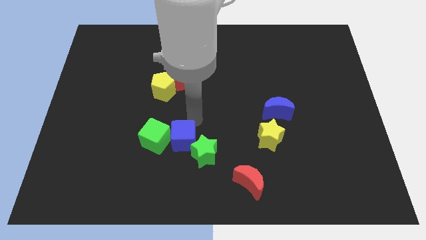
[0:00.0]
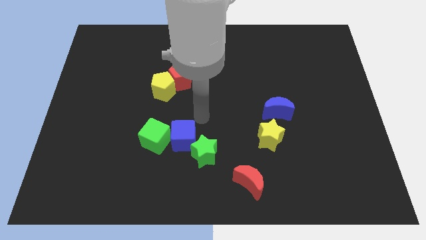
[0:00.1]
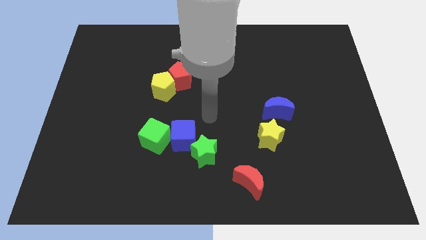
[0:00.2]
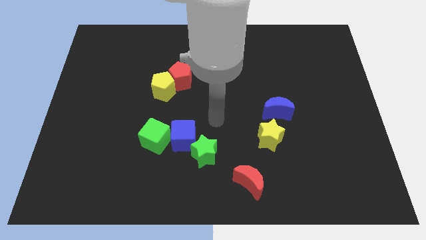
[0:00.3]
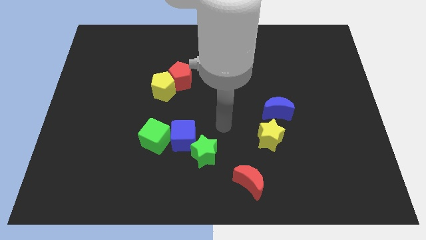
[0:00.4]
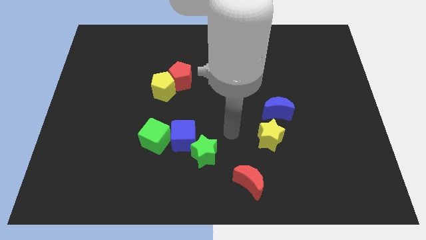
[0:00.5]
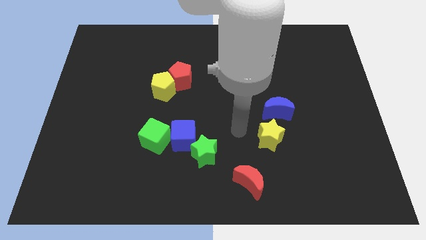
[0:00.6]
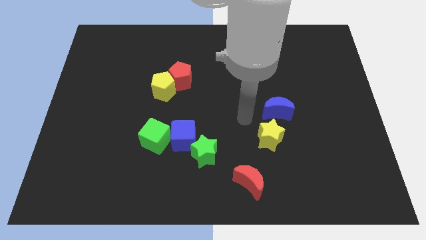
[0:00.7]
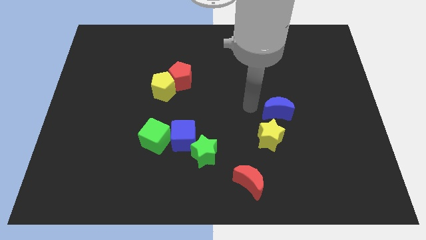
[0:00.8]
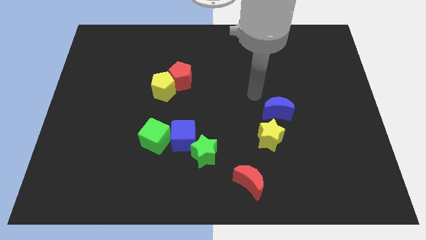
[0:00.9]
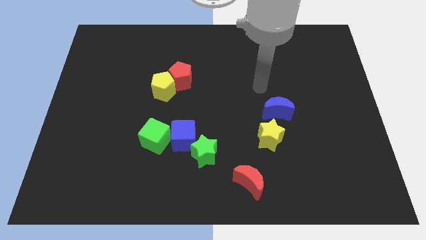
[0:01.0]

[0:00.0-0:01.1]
move your arm towards center of the board

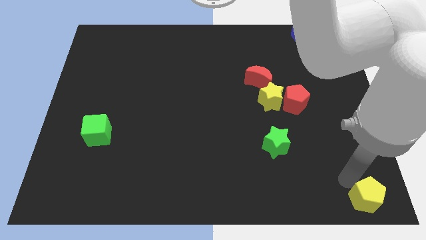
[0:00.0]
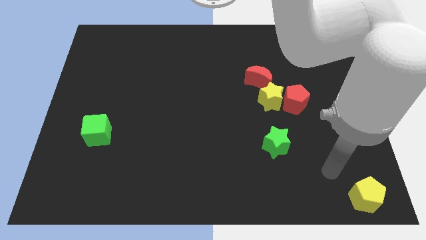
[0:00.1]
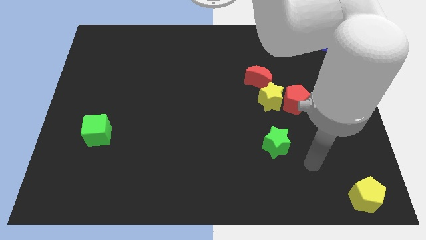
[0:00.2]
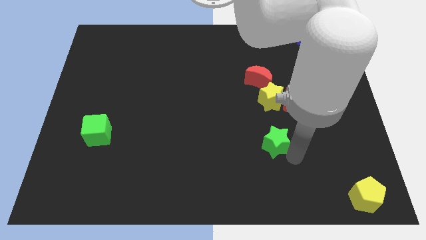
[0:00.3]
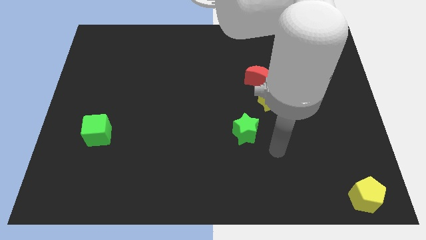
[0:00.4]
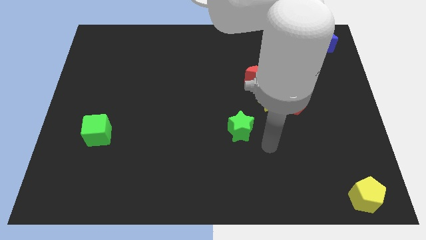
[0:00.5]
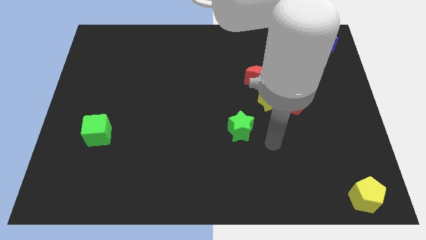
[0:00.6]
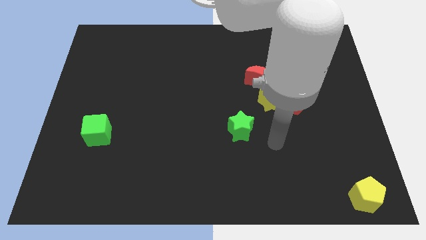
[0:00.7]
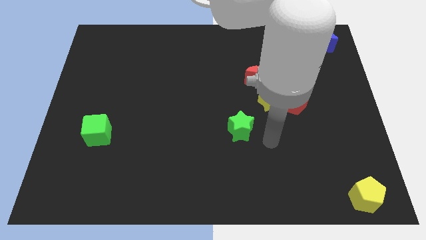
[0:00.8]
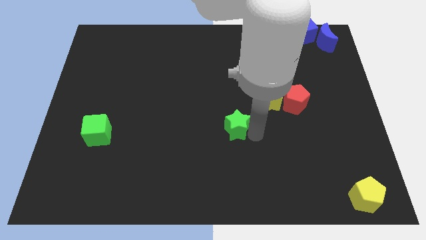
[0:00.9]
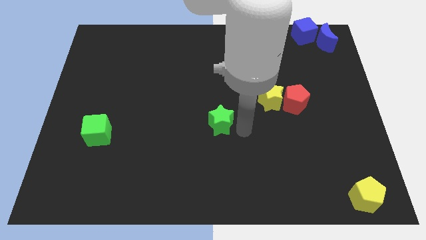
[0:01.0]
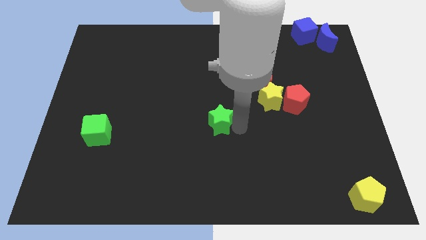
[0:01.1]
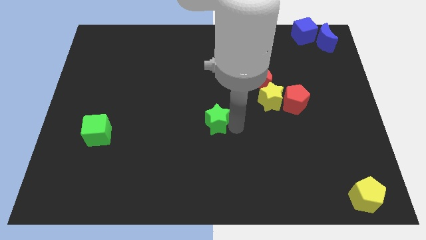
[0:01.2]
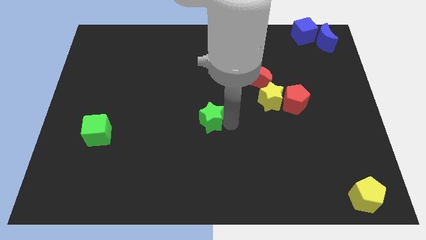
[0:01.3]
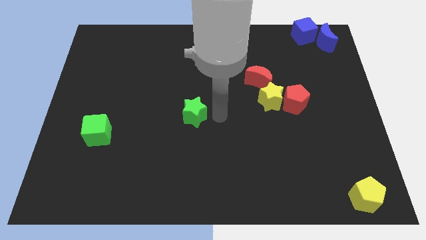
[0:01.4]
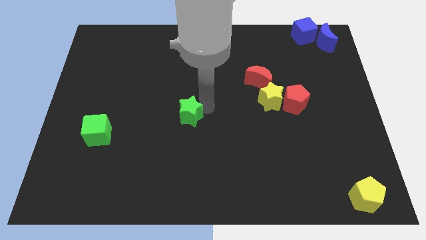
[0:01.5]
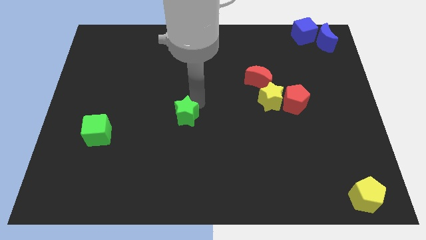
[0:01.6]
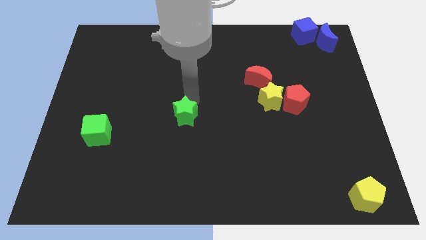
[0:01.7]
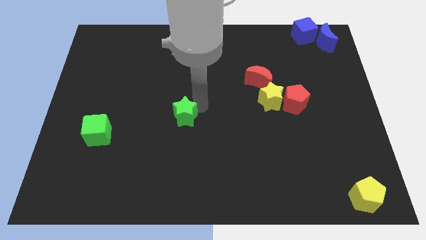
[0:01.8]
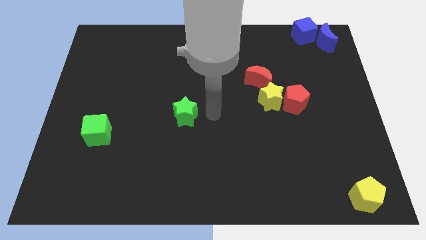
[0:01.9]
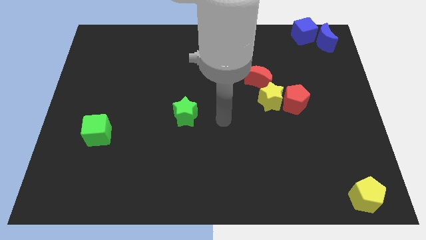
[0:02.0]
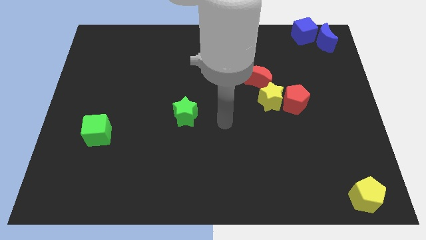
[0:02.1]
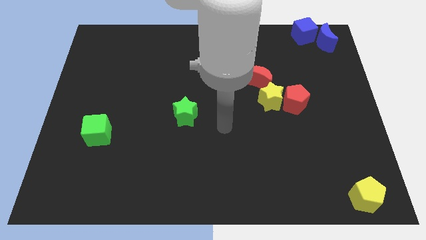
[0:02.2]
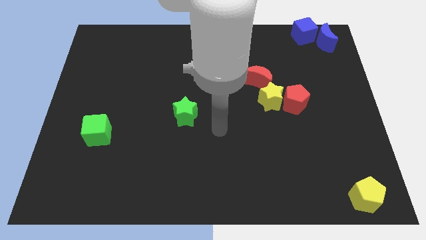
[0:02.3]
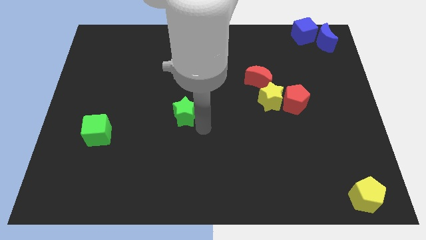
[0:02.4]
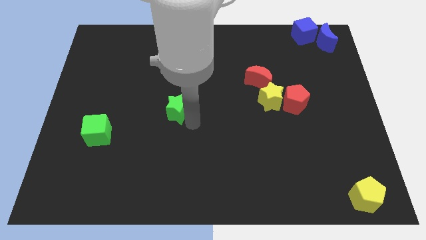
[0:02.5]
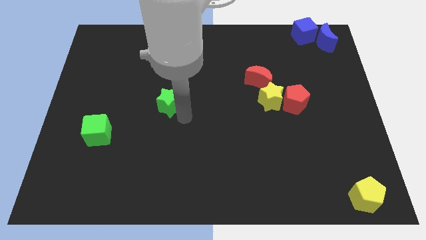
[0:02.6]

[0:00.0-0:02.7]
move the green star to the center

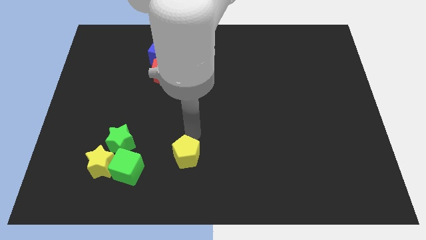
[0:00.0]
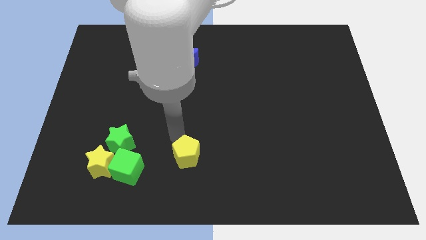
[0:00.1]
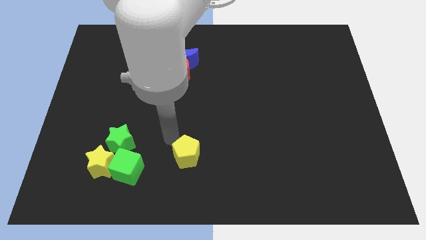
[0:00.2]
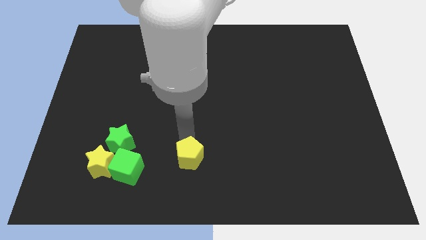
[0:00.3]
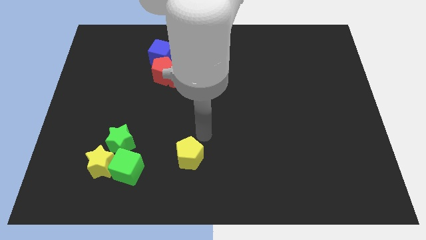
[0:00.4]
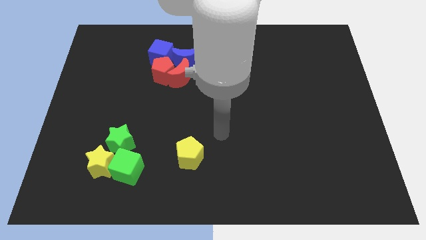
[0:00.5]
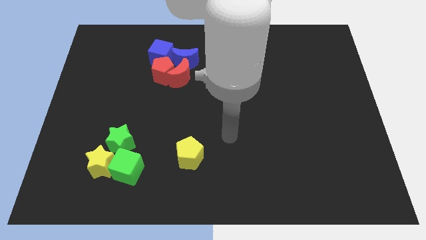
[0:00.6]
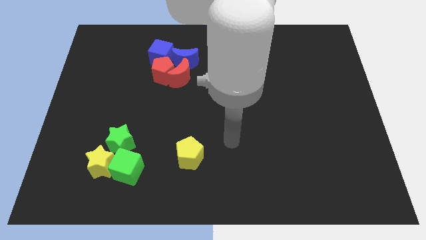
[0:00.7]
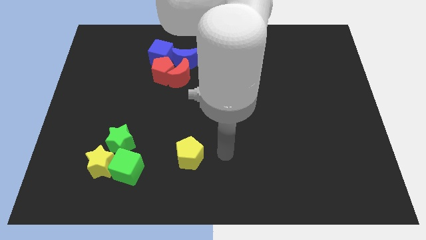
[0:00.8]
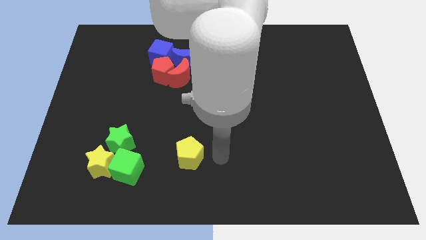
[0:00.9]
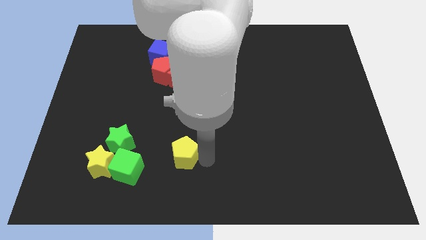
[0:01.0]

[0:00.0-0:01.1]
move the yellow pentagon slightly downwards

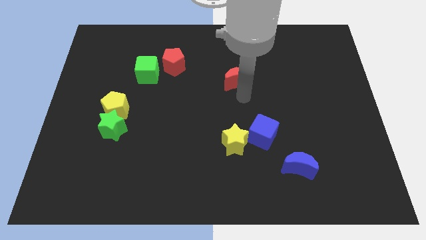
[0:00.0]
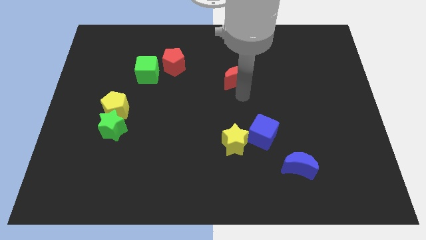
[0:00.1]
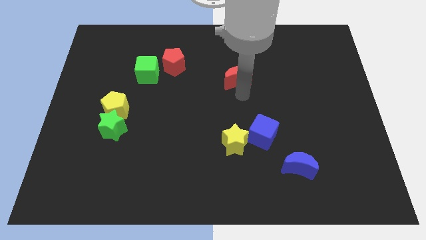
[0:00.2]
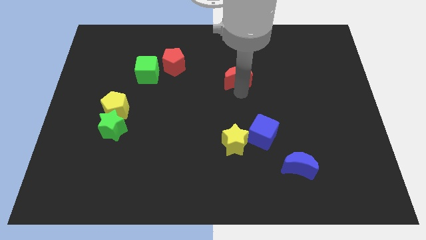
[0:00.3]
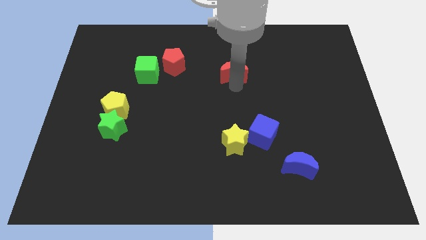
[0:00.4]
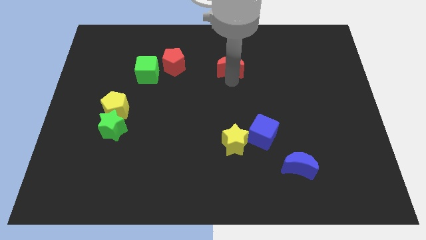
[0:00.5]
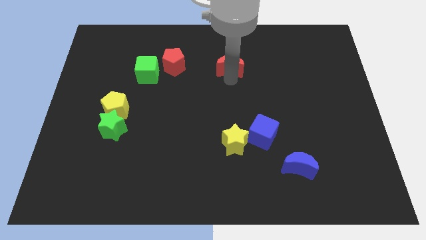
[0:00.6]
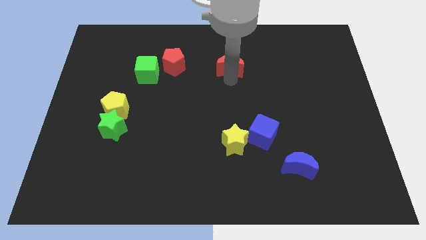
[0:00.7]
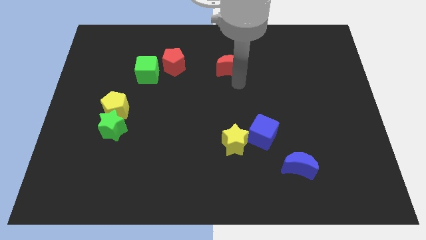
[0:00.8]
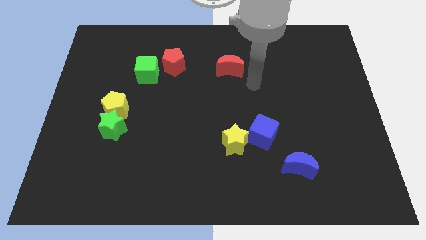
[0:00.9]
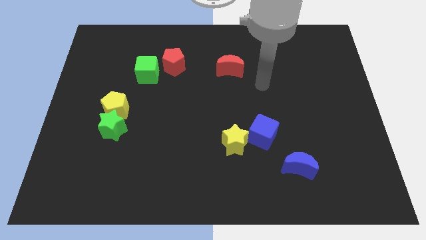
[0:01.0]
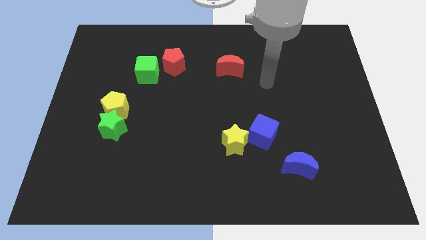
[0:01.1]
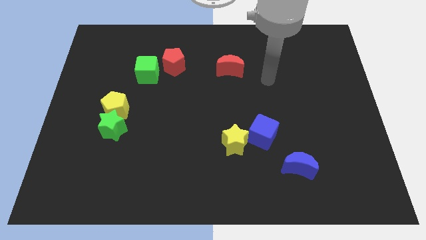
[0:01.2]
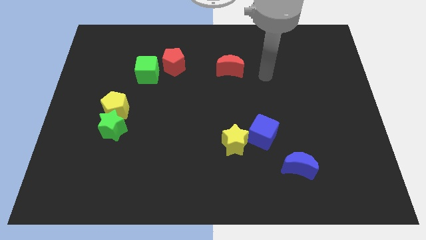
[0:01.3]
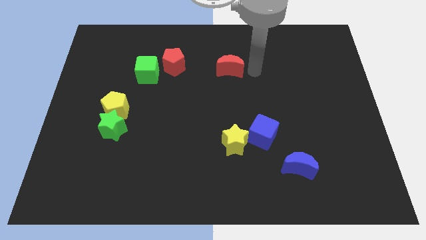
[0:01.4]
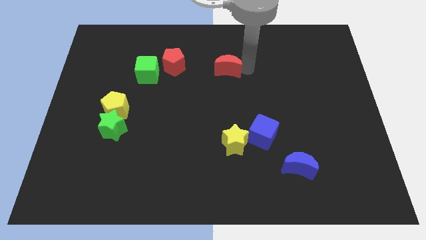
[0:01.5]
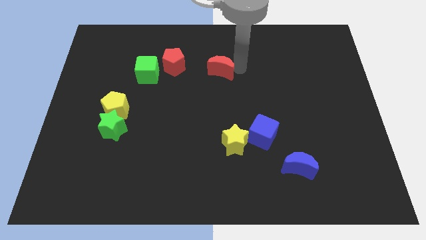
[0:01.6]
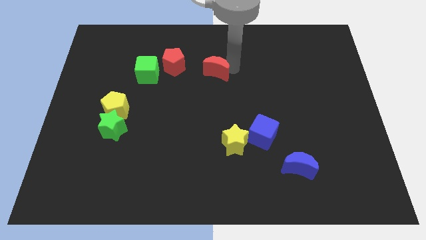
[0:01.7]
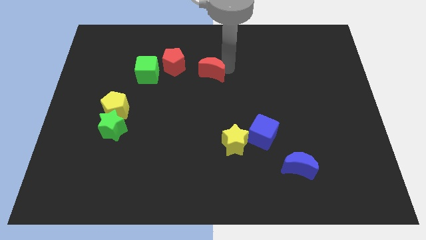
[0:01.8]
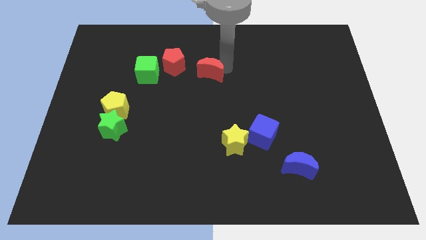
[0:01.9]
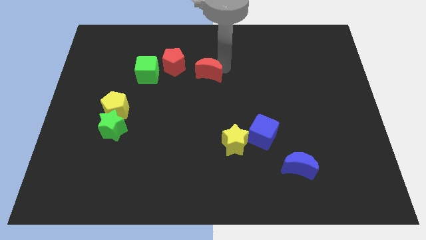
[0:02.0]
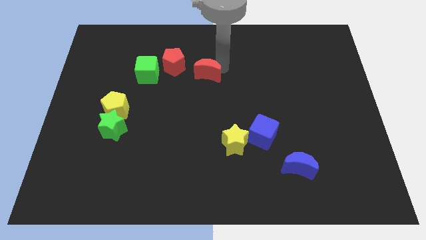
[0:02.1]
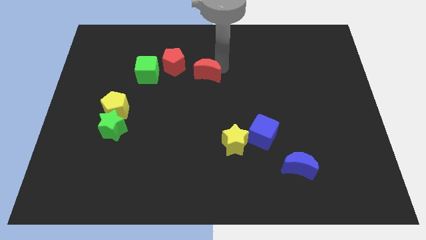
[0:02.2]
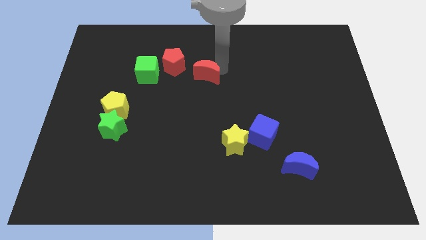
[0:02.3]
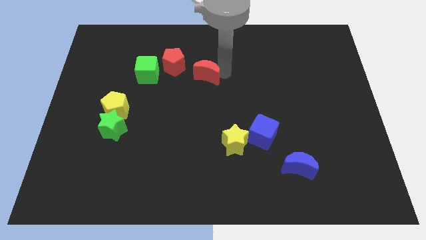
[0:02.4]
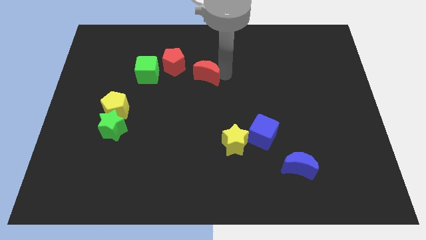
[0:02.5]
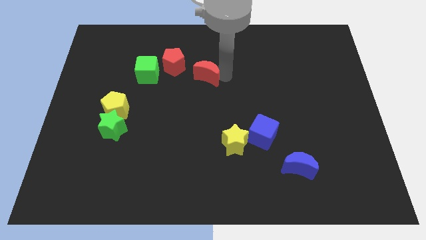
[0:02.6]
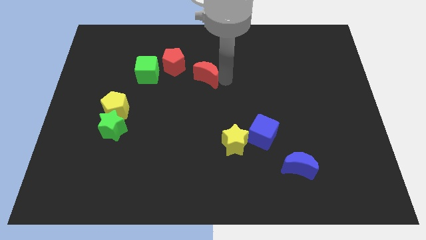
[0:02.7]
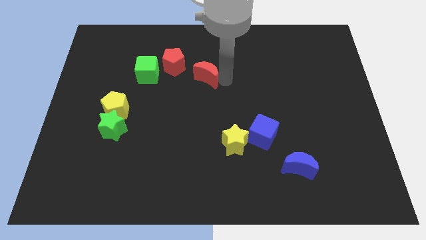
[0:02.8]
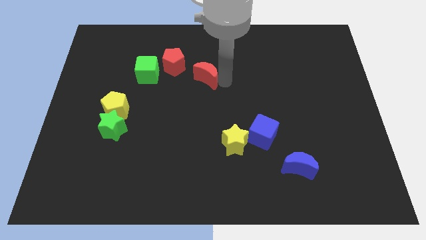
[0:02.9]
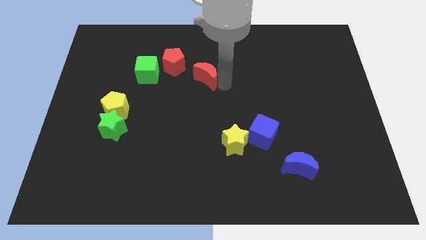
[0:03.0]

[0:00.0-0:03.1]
push the red crescent to the bottom right of the red pentagon

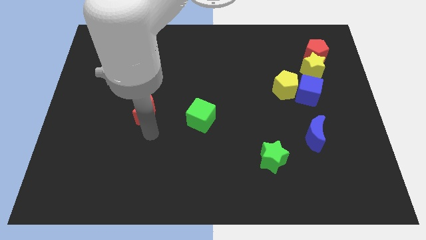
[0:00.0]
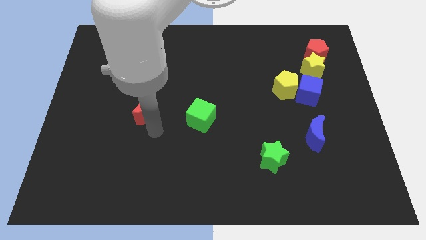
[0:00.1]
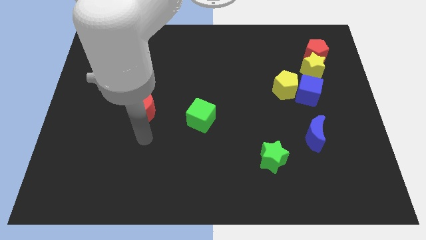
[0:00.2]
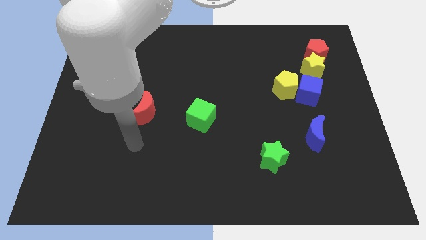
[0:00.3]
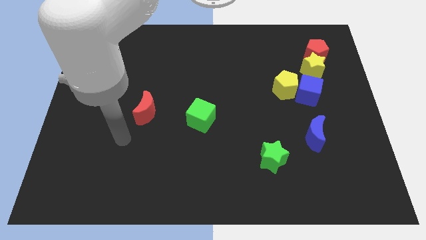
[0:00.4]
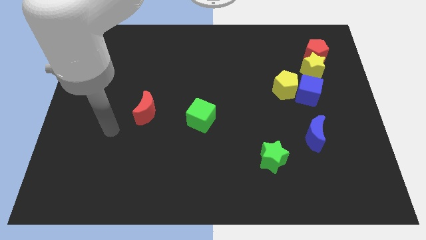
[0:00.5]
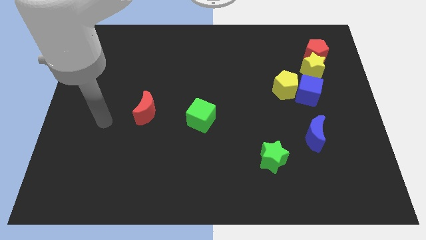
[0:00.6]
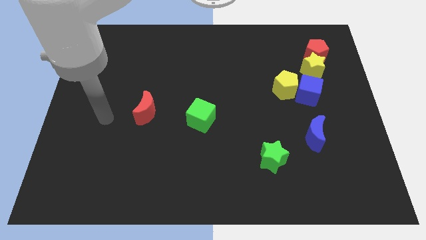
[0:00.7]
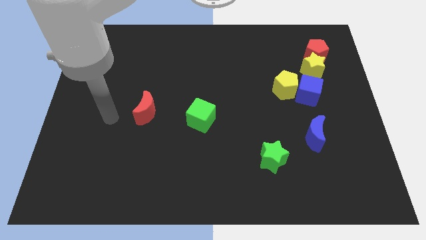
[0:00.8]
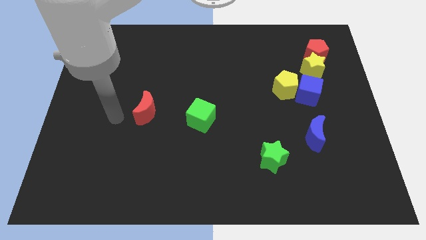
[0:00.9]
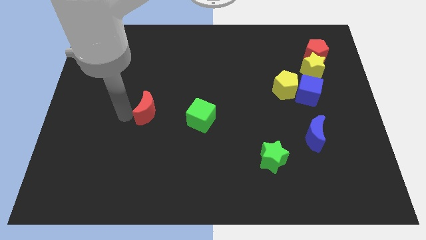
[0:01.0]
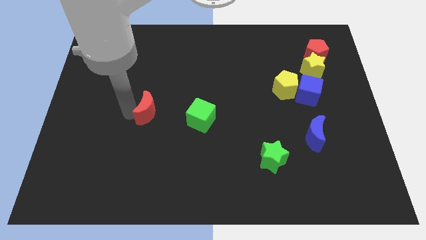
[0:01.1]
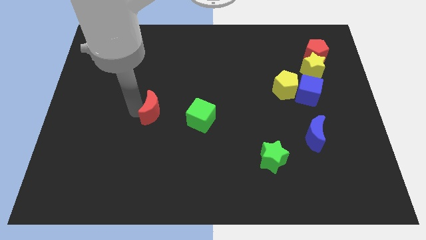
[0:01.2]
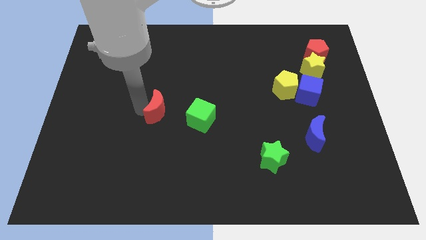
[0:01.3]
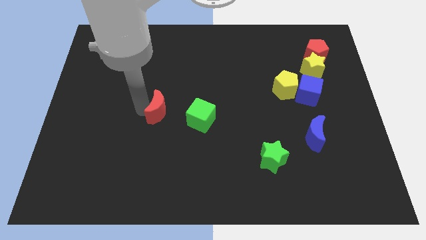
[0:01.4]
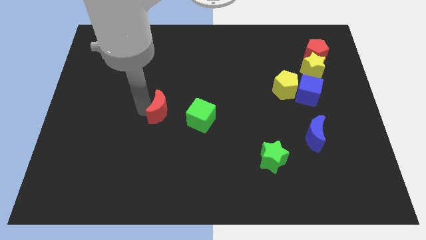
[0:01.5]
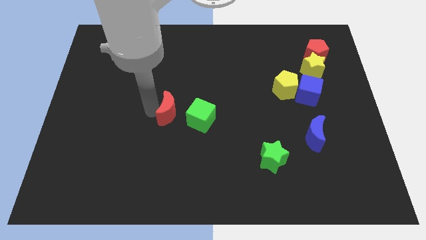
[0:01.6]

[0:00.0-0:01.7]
push the red crescent to the right
